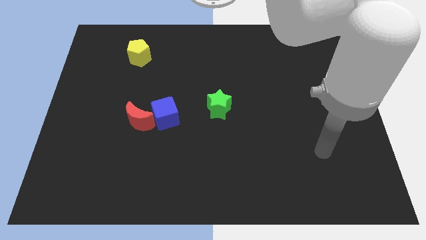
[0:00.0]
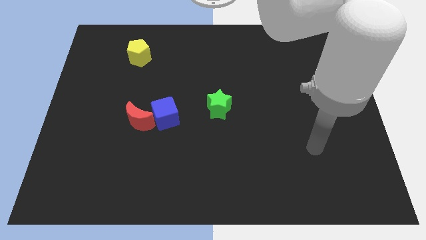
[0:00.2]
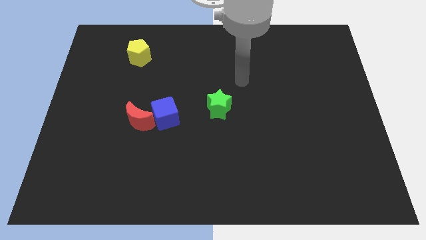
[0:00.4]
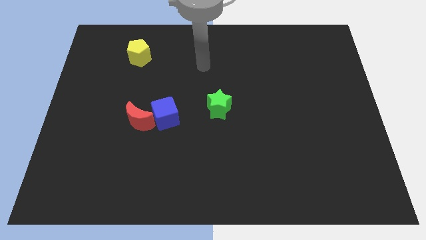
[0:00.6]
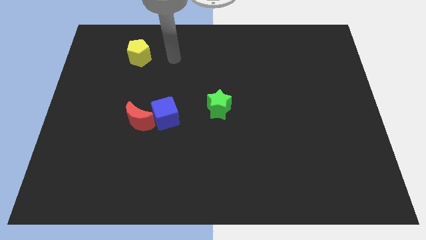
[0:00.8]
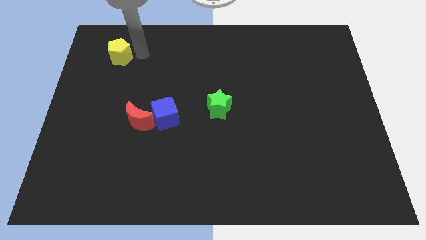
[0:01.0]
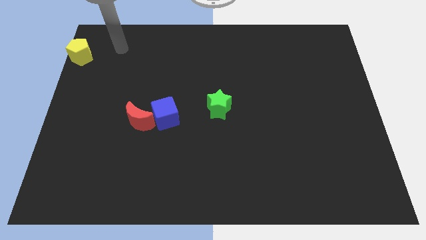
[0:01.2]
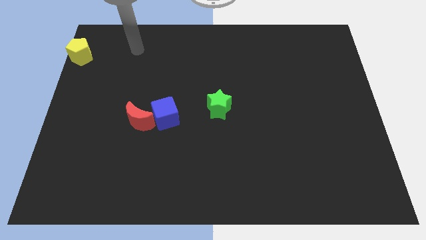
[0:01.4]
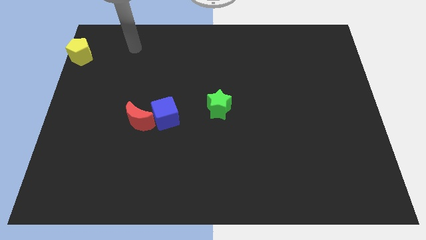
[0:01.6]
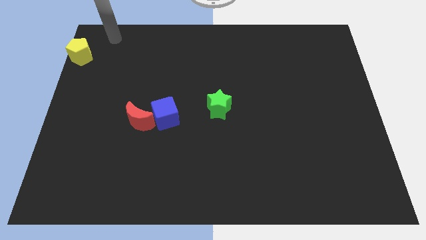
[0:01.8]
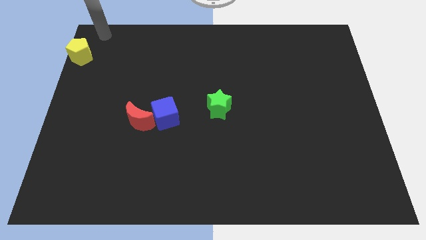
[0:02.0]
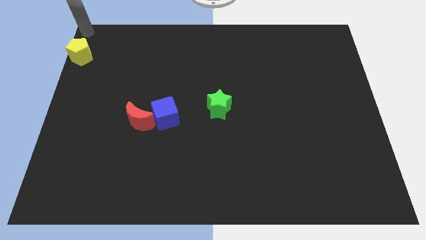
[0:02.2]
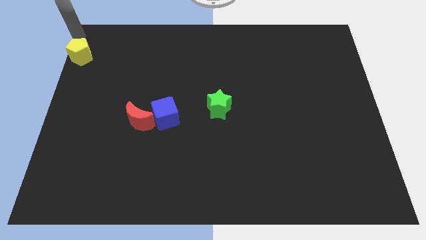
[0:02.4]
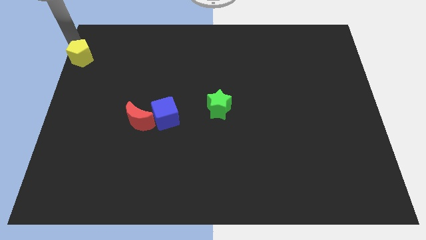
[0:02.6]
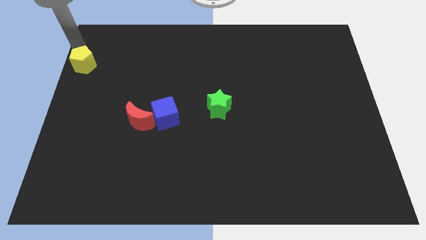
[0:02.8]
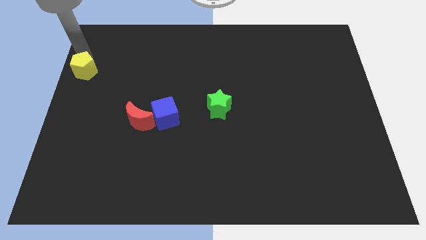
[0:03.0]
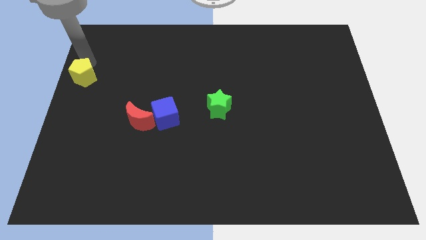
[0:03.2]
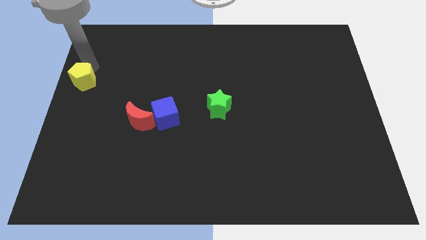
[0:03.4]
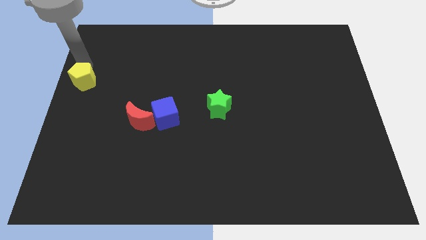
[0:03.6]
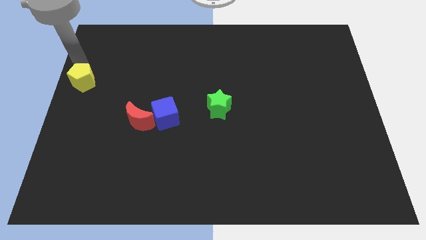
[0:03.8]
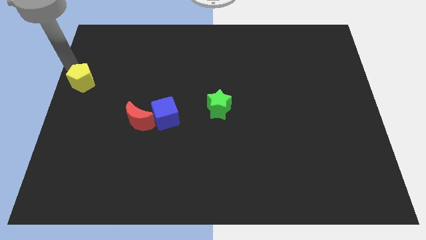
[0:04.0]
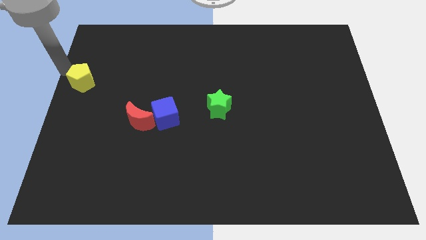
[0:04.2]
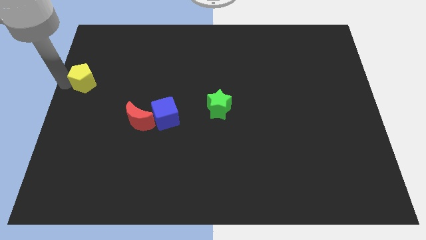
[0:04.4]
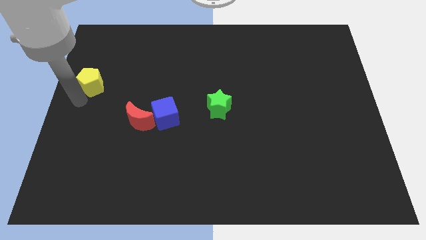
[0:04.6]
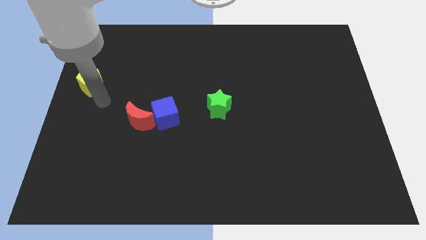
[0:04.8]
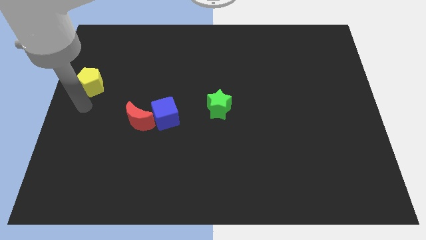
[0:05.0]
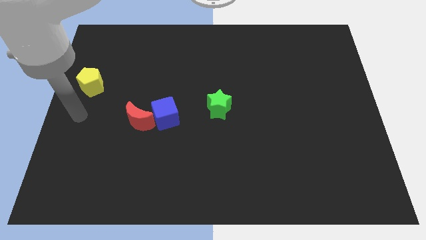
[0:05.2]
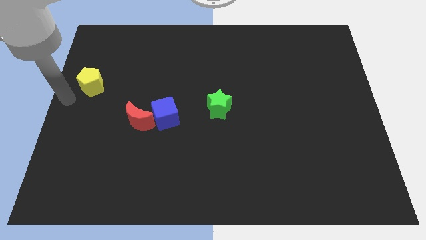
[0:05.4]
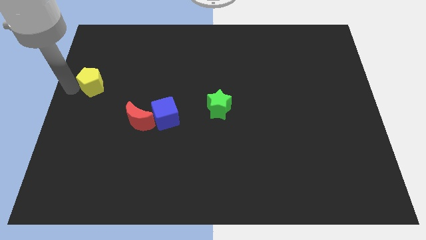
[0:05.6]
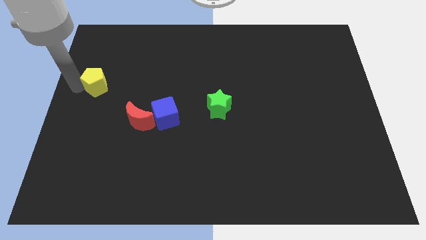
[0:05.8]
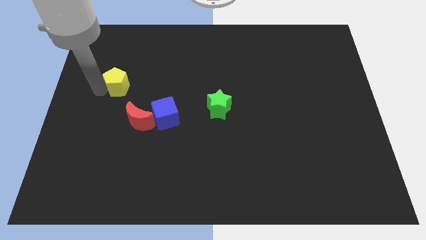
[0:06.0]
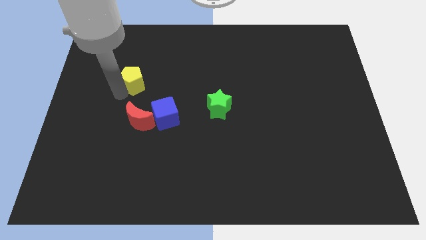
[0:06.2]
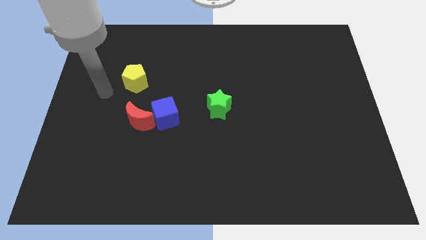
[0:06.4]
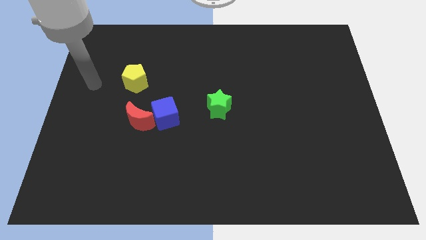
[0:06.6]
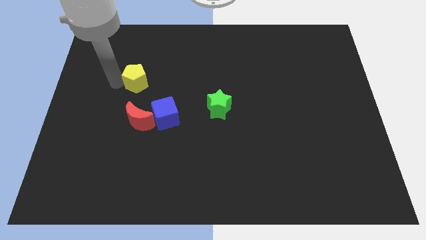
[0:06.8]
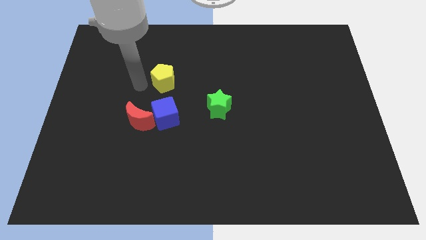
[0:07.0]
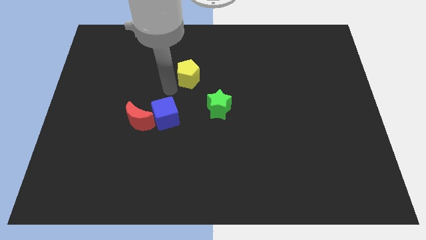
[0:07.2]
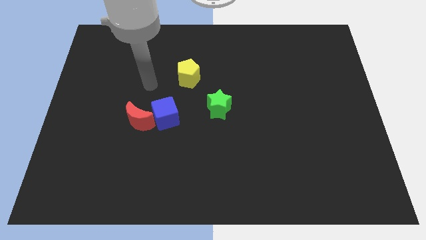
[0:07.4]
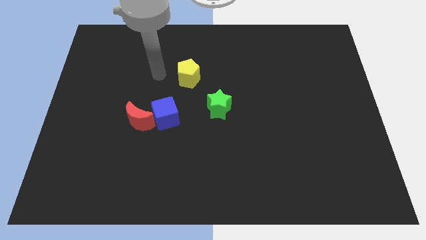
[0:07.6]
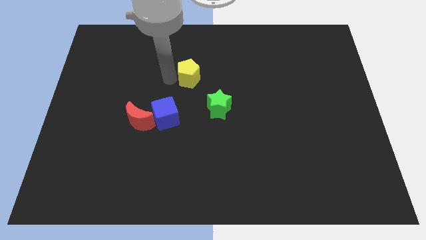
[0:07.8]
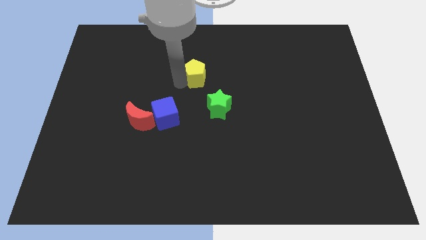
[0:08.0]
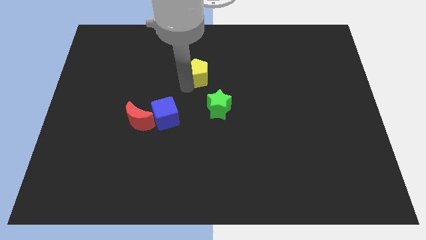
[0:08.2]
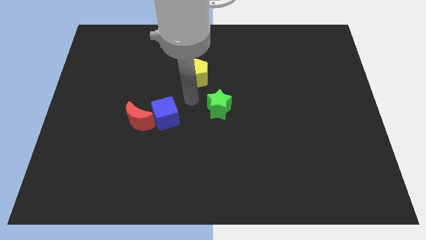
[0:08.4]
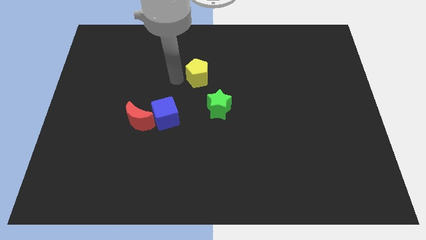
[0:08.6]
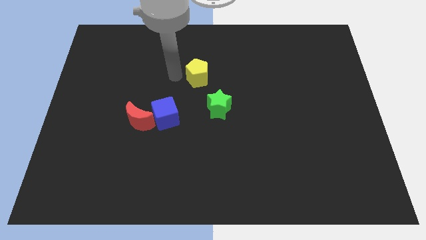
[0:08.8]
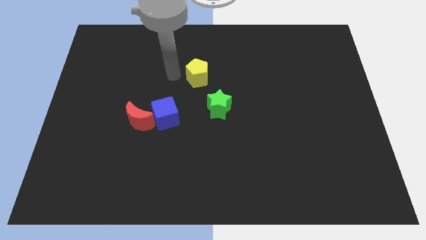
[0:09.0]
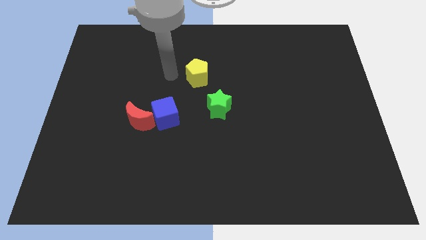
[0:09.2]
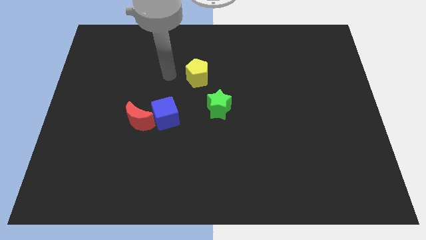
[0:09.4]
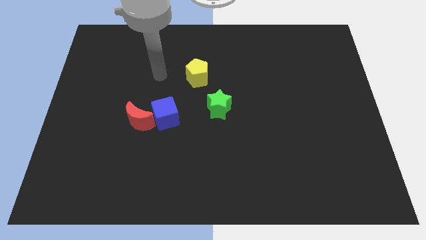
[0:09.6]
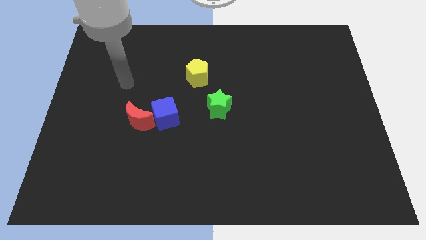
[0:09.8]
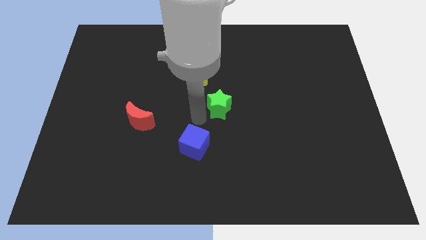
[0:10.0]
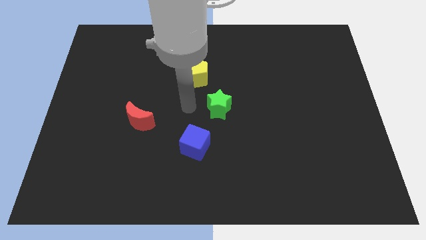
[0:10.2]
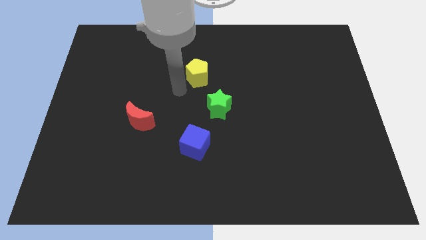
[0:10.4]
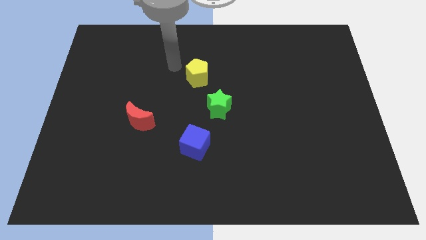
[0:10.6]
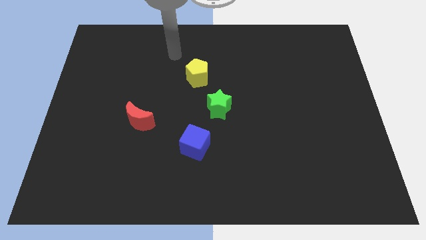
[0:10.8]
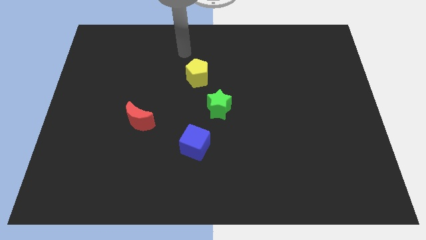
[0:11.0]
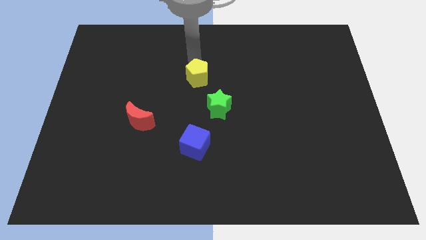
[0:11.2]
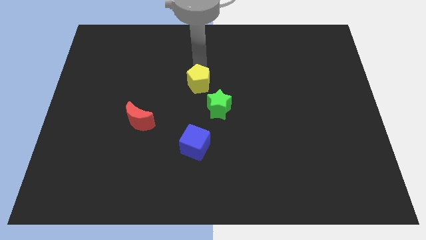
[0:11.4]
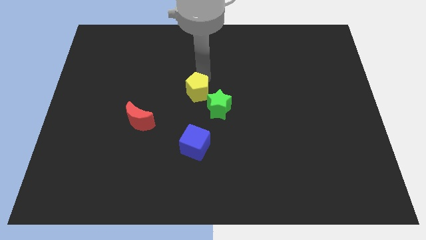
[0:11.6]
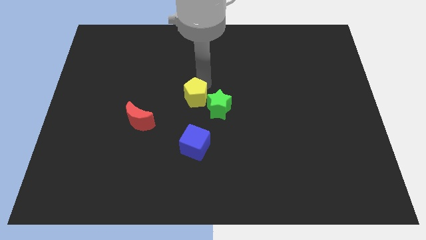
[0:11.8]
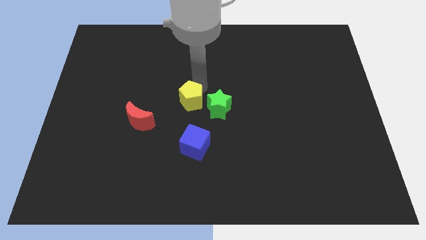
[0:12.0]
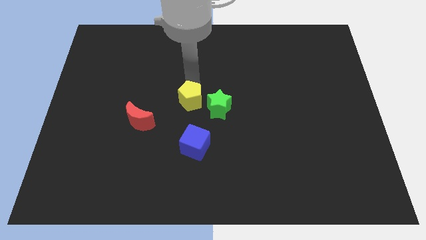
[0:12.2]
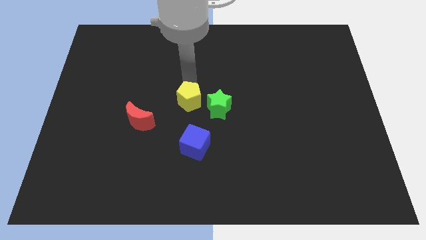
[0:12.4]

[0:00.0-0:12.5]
slide the yellow pentagon to the green star

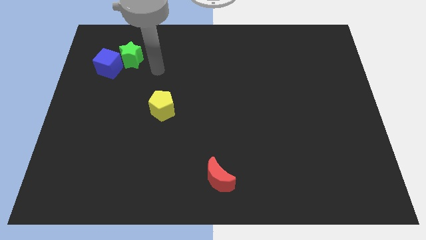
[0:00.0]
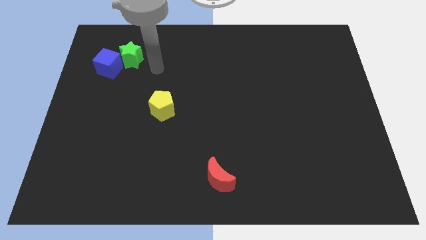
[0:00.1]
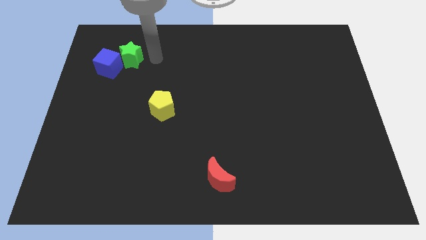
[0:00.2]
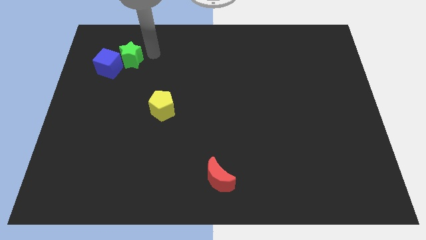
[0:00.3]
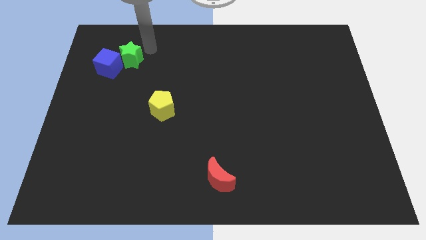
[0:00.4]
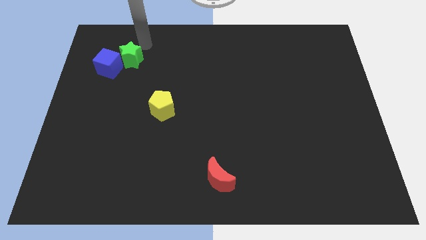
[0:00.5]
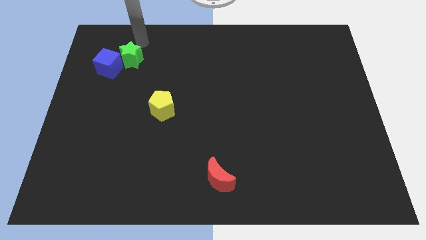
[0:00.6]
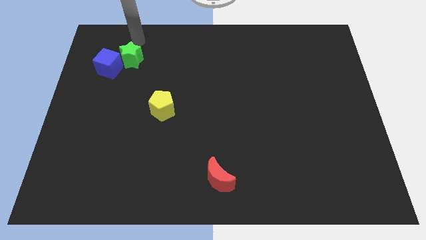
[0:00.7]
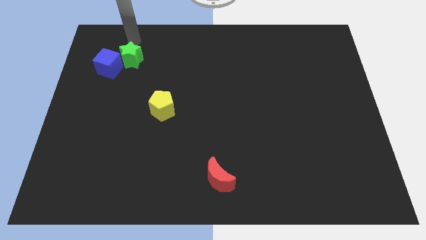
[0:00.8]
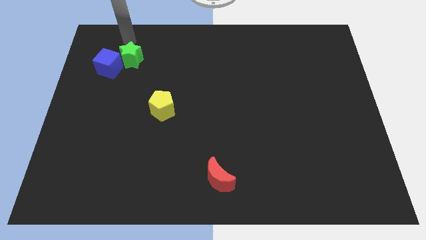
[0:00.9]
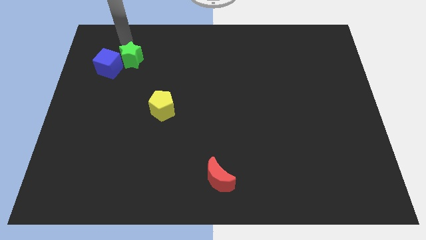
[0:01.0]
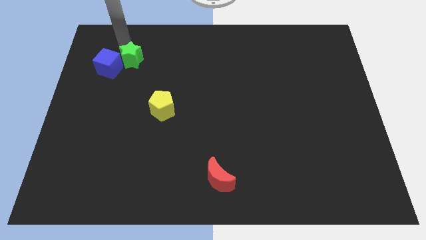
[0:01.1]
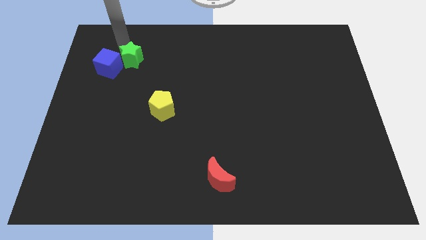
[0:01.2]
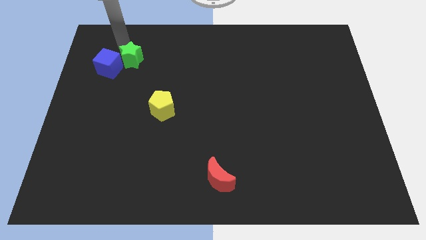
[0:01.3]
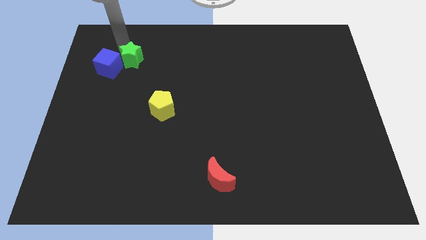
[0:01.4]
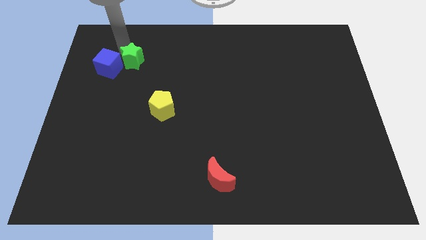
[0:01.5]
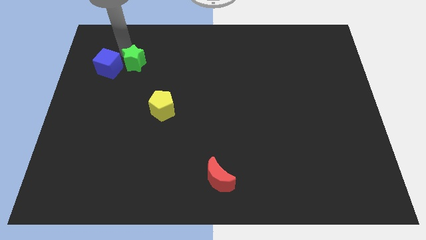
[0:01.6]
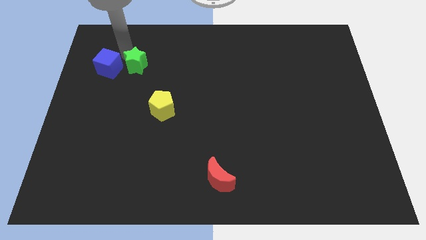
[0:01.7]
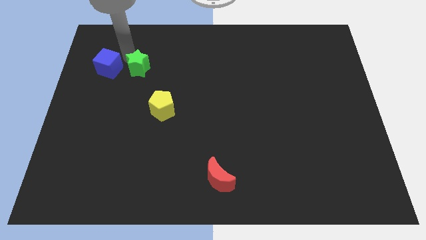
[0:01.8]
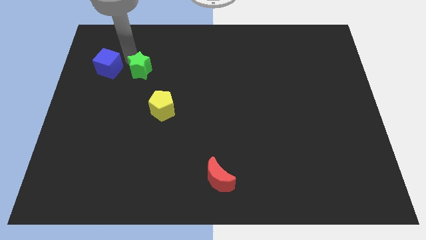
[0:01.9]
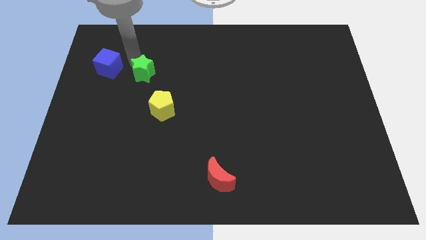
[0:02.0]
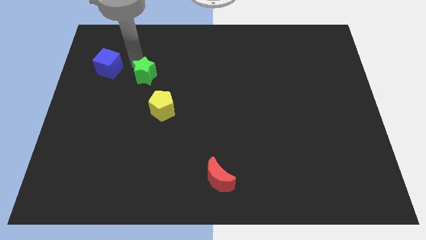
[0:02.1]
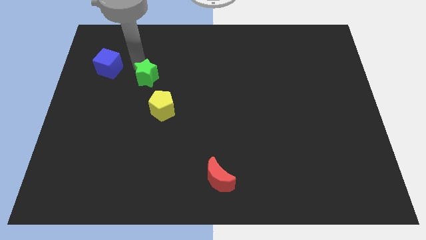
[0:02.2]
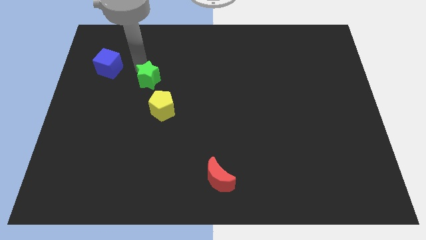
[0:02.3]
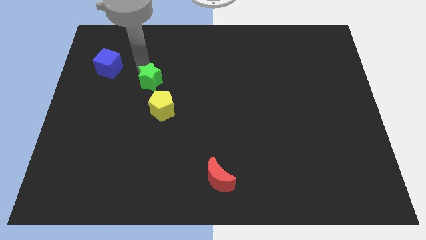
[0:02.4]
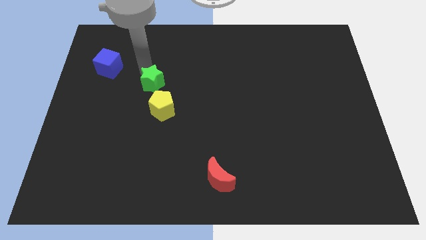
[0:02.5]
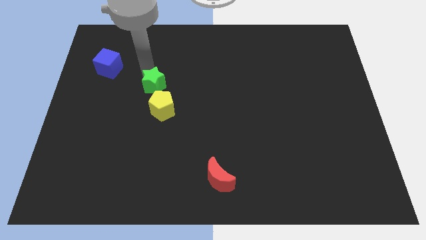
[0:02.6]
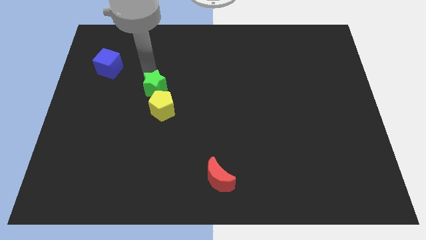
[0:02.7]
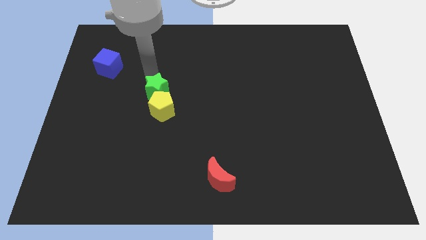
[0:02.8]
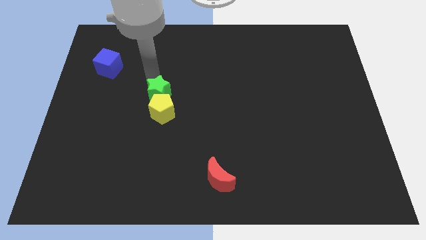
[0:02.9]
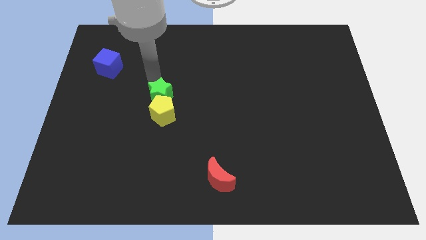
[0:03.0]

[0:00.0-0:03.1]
push the star to the pentagon
